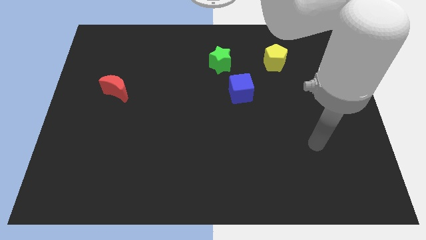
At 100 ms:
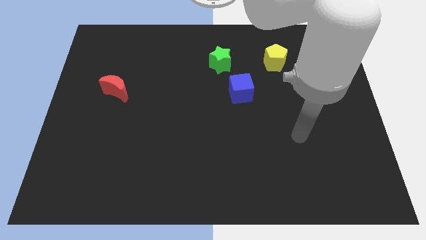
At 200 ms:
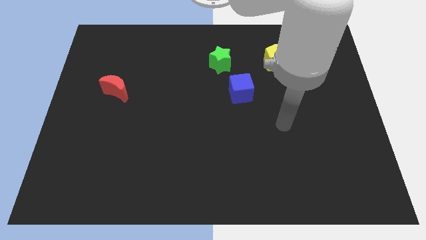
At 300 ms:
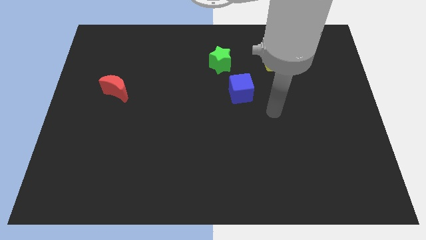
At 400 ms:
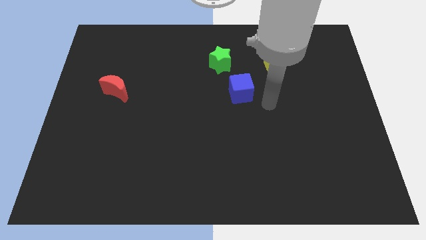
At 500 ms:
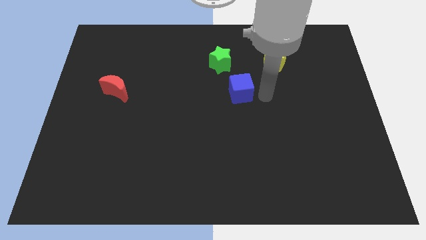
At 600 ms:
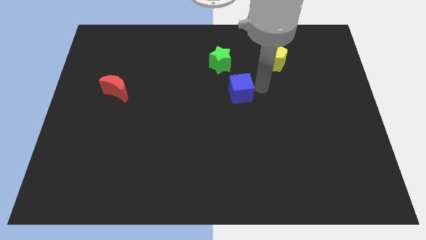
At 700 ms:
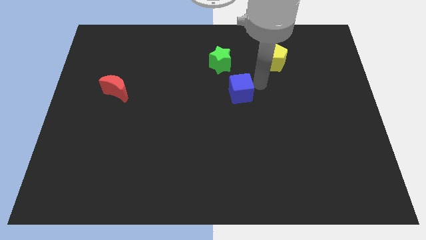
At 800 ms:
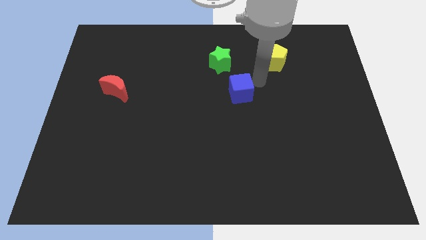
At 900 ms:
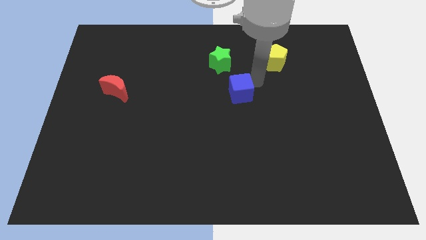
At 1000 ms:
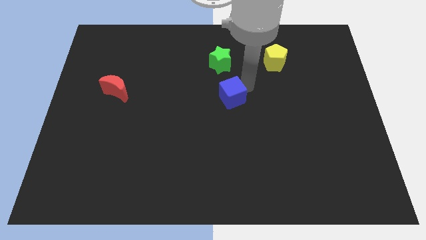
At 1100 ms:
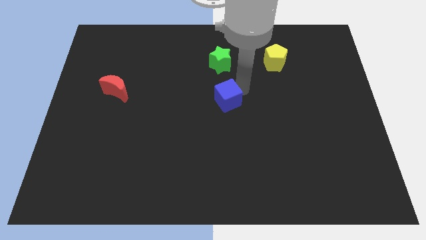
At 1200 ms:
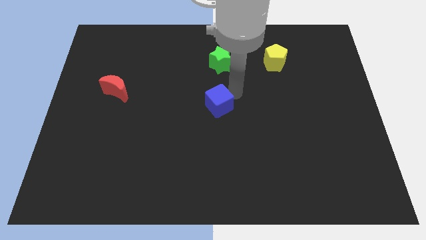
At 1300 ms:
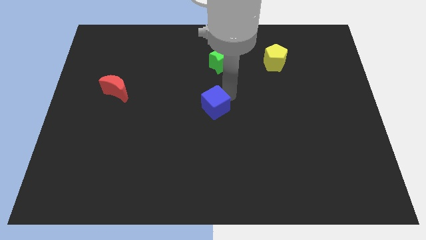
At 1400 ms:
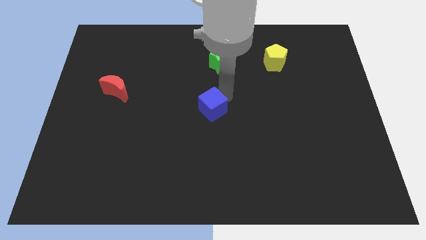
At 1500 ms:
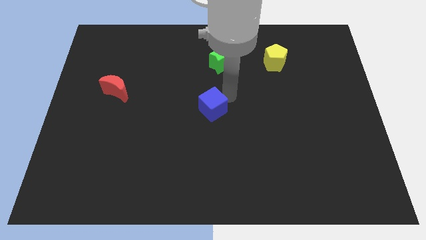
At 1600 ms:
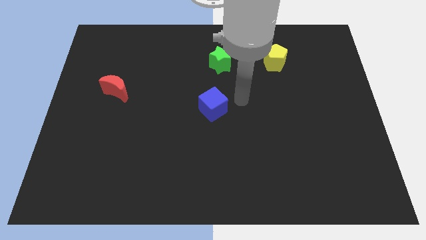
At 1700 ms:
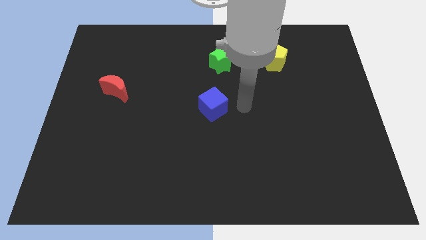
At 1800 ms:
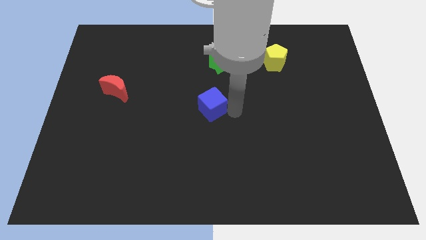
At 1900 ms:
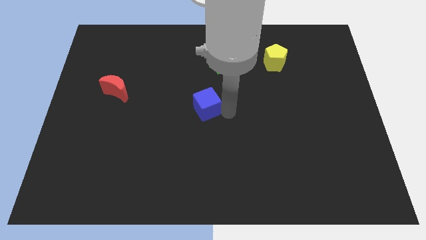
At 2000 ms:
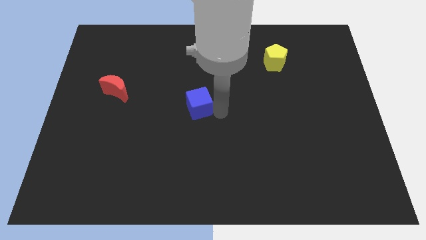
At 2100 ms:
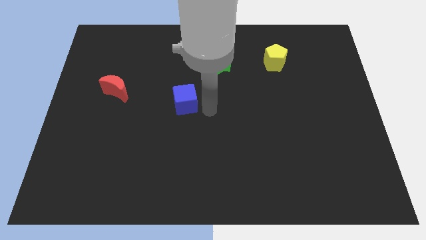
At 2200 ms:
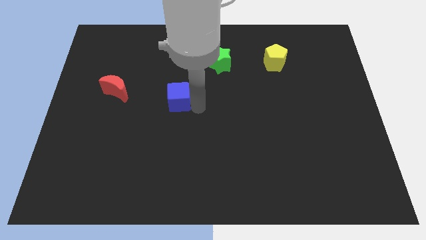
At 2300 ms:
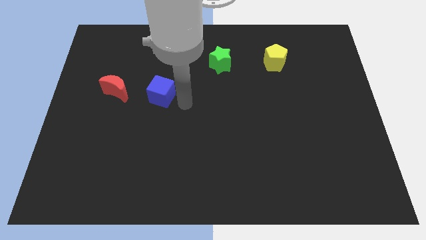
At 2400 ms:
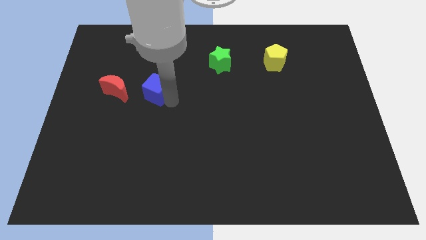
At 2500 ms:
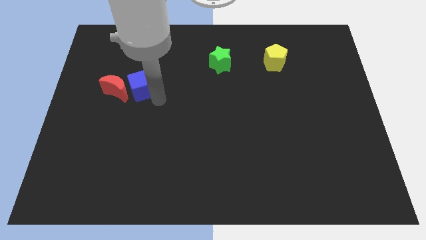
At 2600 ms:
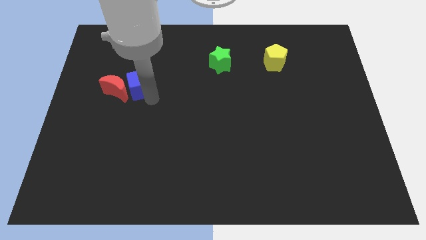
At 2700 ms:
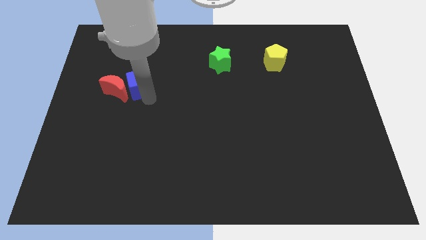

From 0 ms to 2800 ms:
move the blue block next to the moon

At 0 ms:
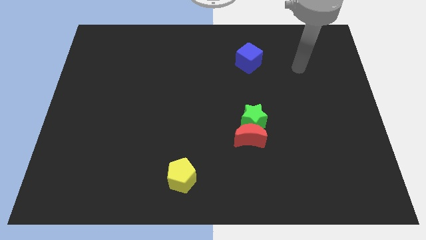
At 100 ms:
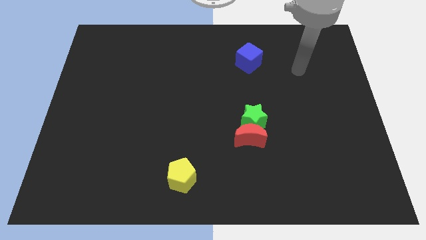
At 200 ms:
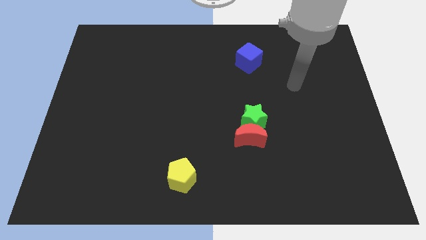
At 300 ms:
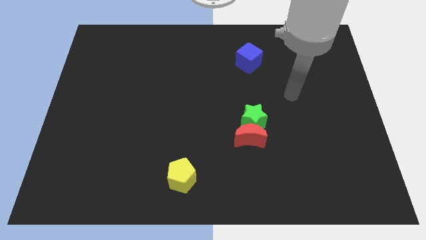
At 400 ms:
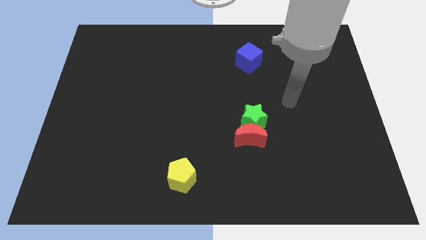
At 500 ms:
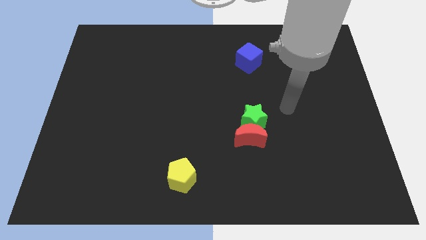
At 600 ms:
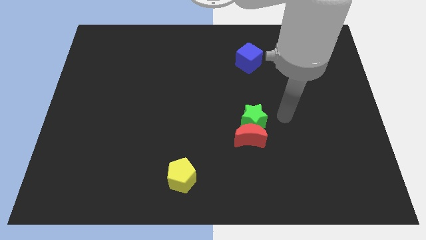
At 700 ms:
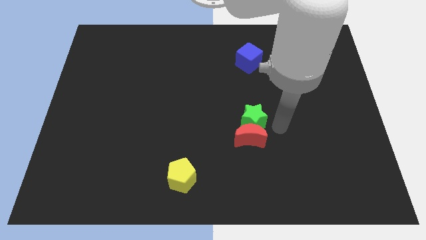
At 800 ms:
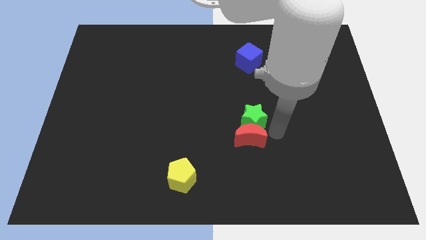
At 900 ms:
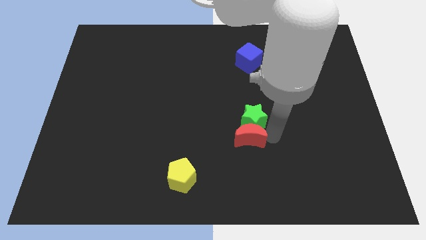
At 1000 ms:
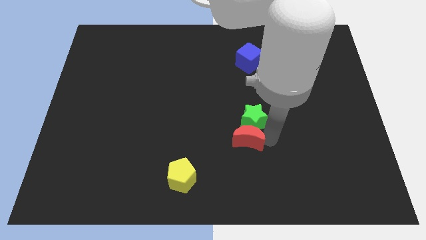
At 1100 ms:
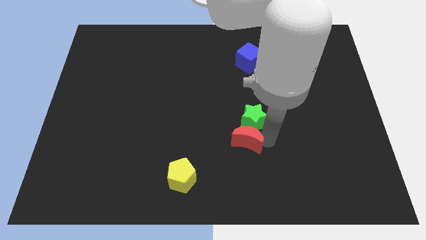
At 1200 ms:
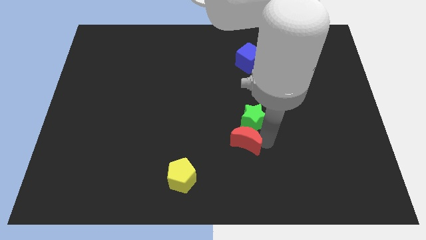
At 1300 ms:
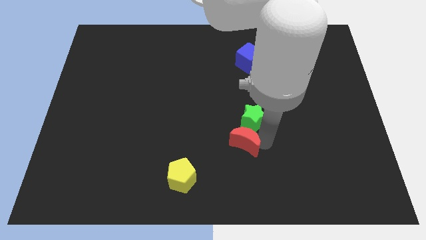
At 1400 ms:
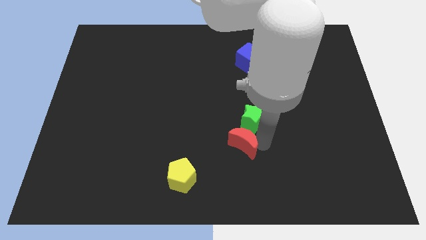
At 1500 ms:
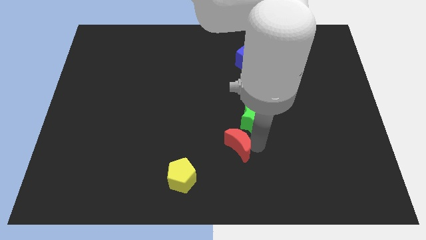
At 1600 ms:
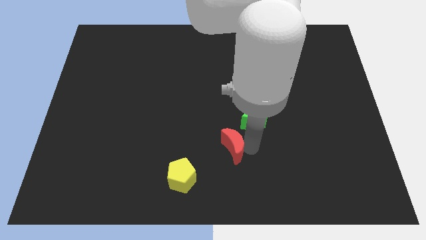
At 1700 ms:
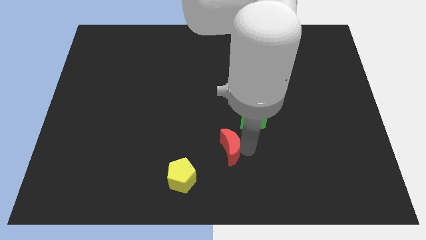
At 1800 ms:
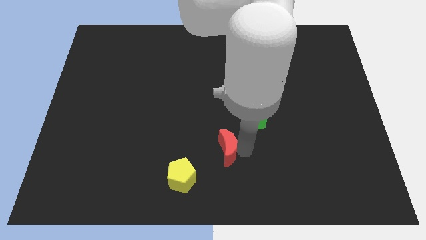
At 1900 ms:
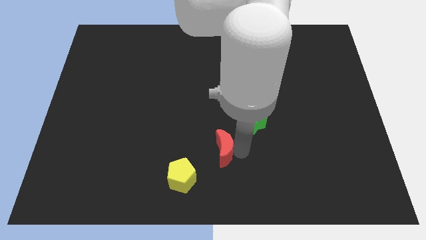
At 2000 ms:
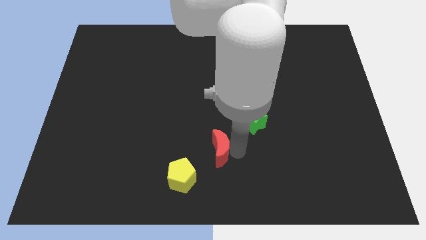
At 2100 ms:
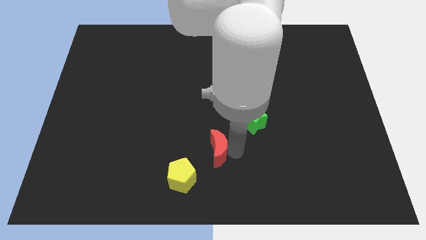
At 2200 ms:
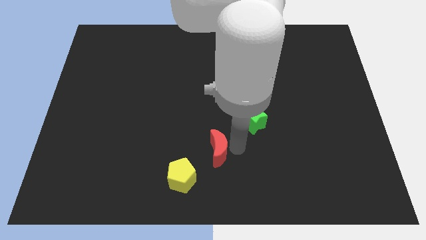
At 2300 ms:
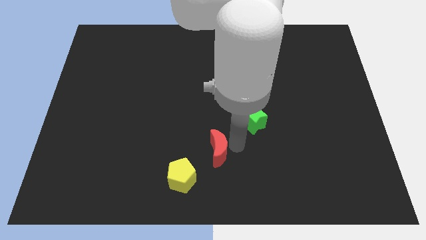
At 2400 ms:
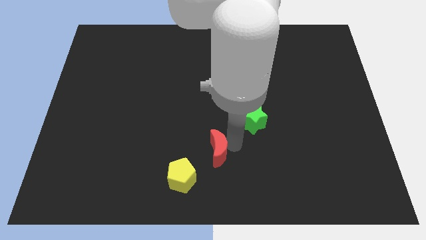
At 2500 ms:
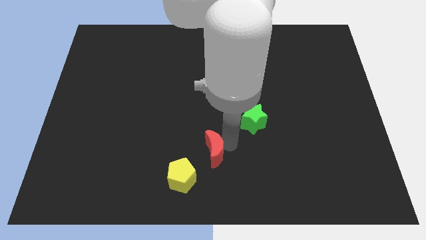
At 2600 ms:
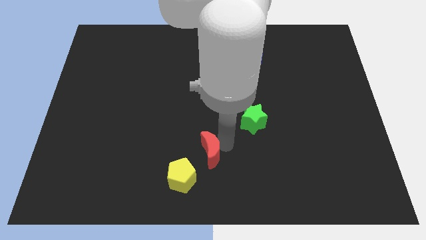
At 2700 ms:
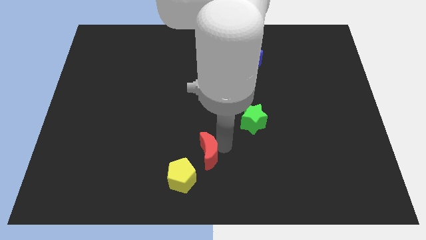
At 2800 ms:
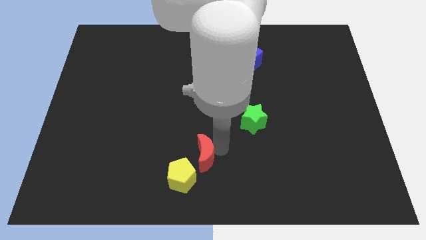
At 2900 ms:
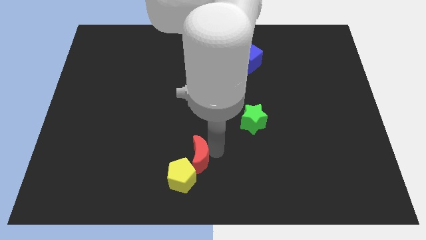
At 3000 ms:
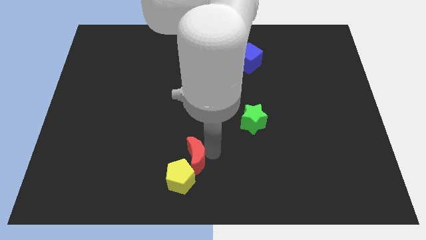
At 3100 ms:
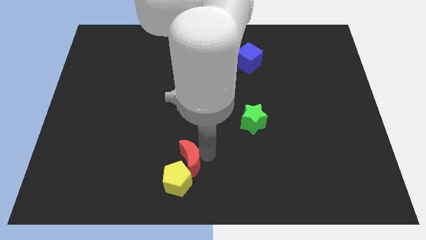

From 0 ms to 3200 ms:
push the red block close to the pentagon

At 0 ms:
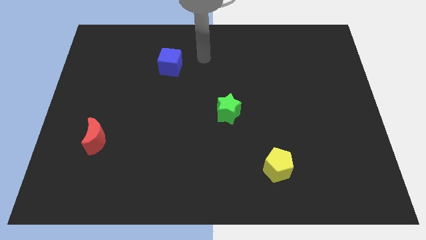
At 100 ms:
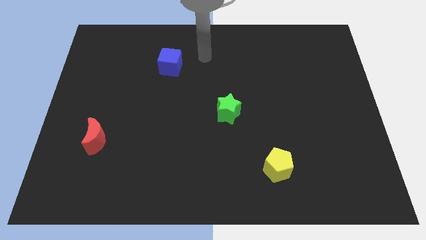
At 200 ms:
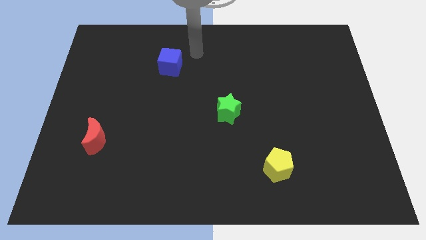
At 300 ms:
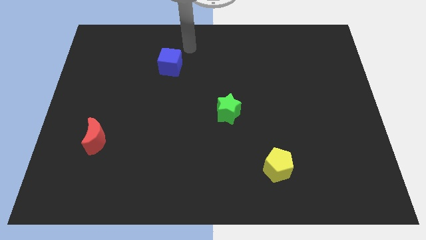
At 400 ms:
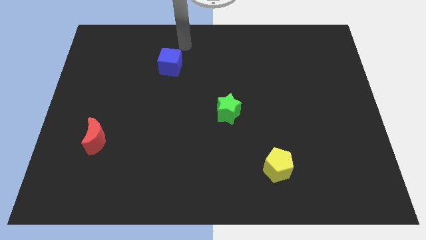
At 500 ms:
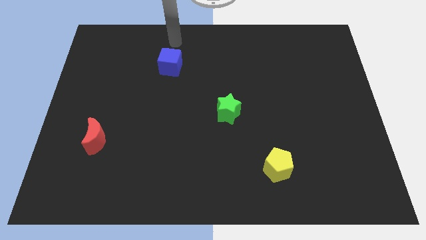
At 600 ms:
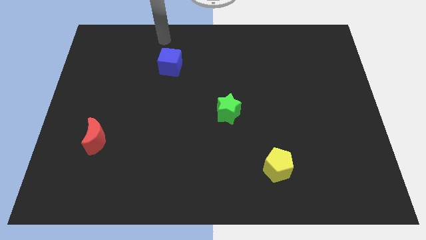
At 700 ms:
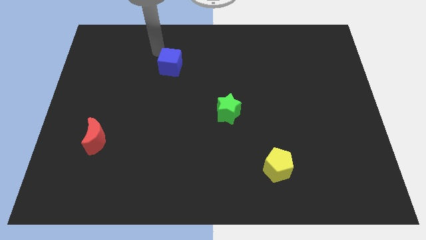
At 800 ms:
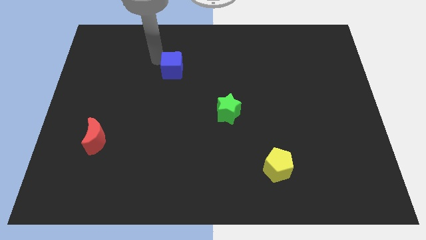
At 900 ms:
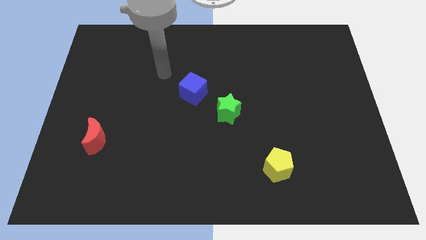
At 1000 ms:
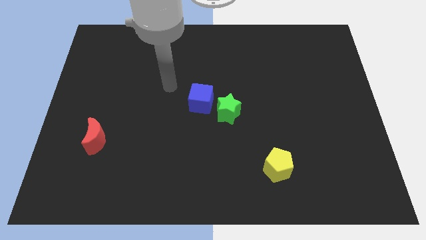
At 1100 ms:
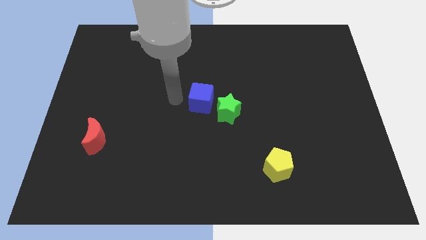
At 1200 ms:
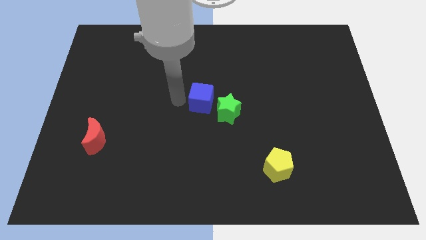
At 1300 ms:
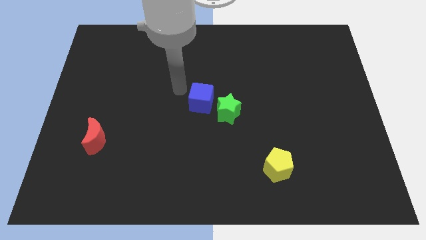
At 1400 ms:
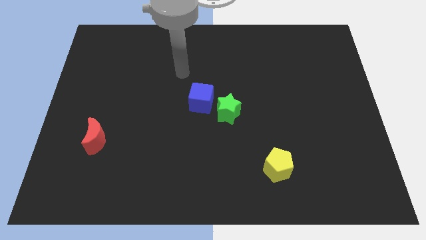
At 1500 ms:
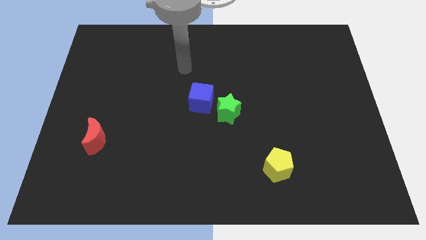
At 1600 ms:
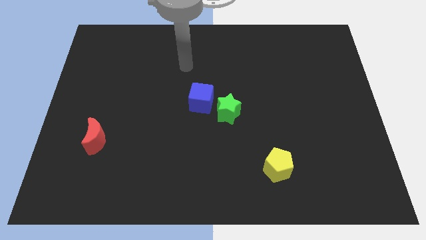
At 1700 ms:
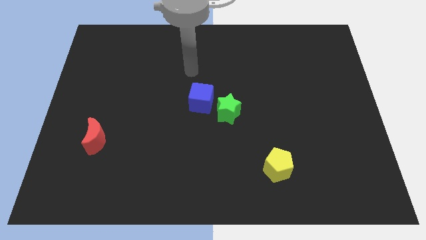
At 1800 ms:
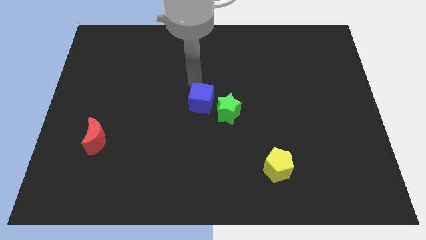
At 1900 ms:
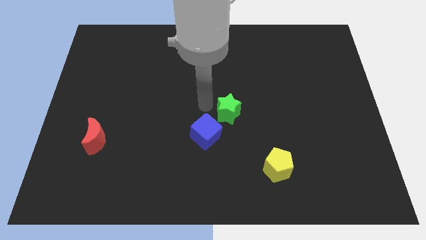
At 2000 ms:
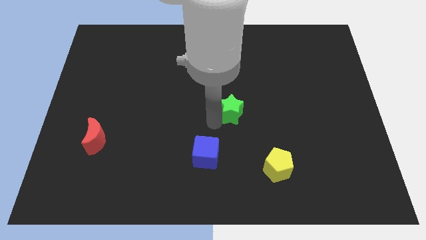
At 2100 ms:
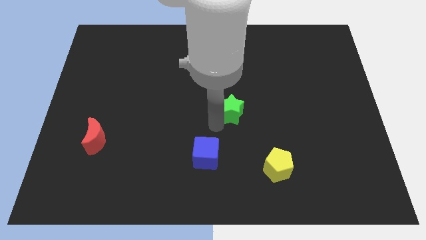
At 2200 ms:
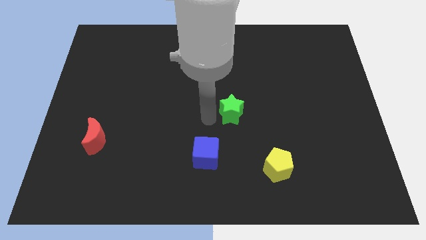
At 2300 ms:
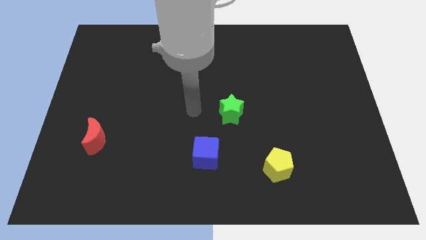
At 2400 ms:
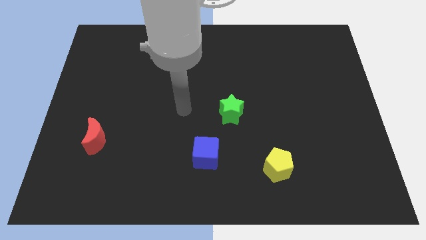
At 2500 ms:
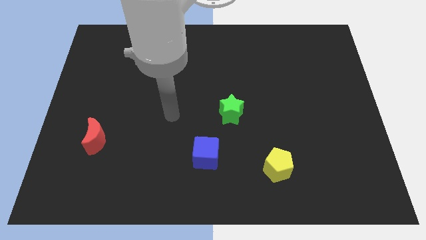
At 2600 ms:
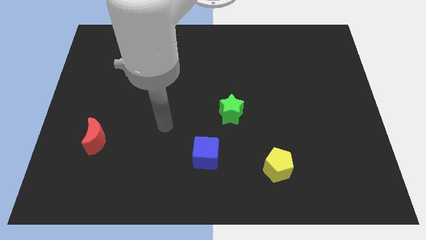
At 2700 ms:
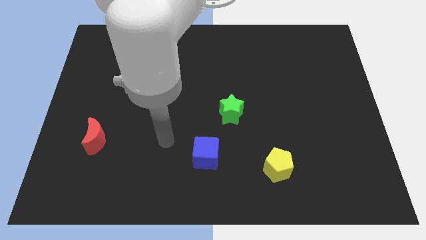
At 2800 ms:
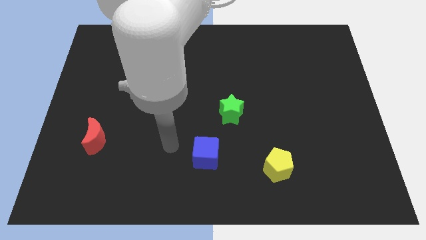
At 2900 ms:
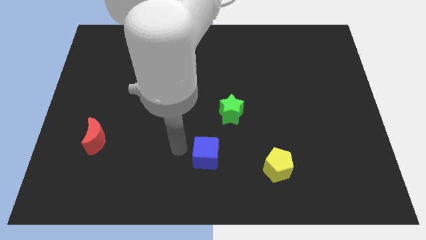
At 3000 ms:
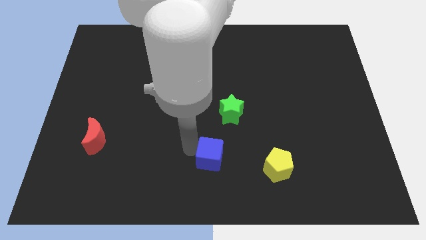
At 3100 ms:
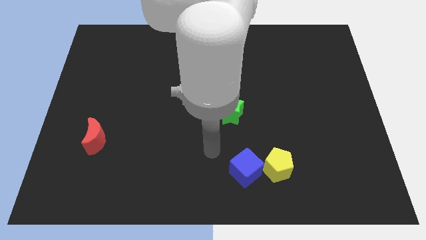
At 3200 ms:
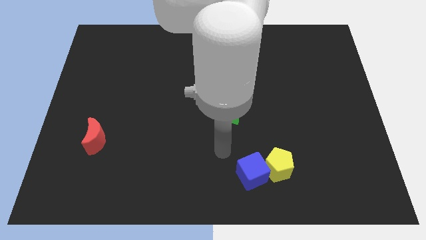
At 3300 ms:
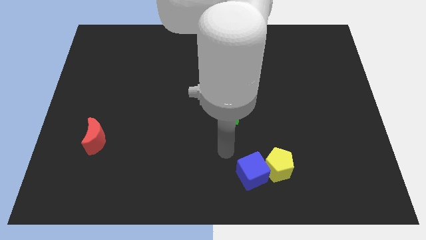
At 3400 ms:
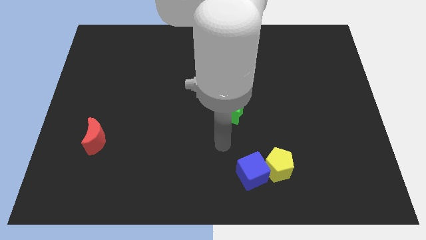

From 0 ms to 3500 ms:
move the cube towards the yellow pentagon
